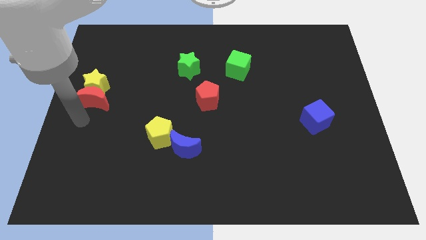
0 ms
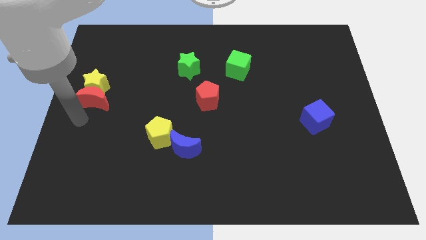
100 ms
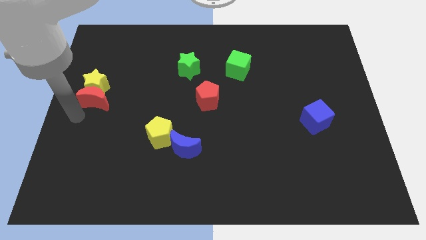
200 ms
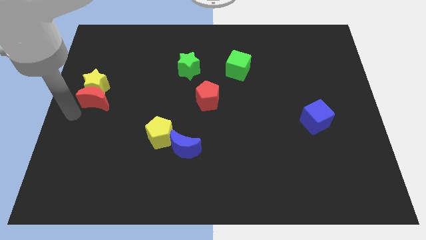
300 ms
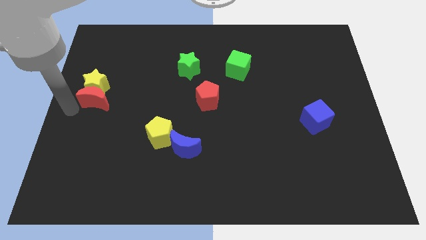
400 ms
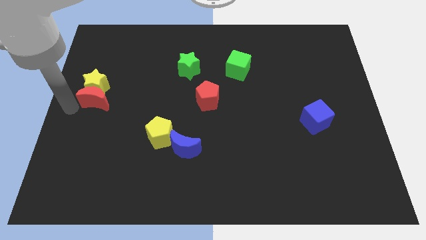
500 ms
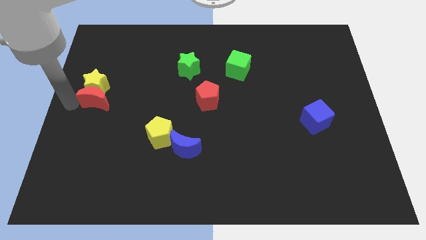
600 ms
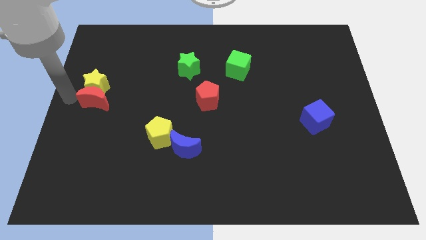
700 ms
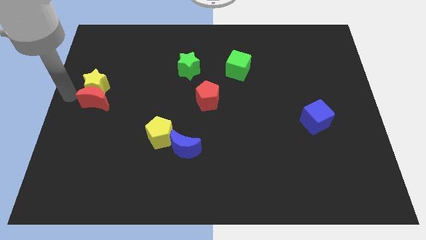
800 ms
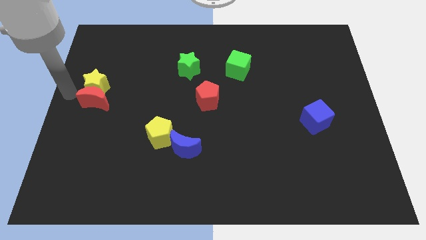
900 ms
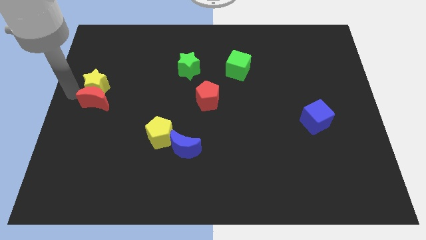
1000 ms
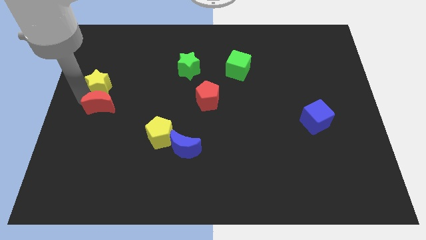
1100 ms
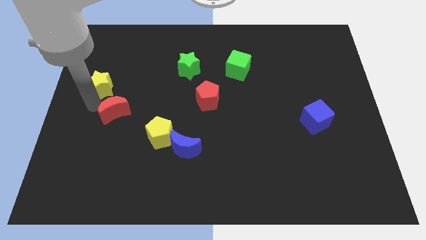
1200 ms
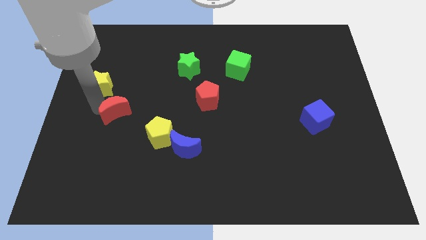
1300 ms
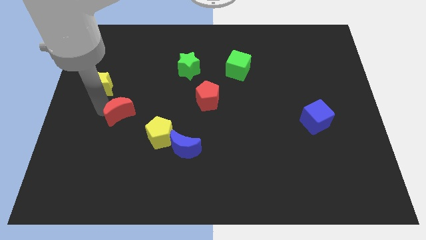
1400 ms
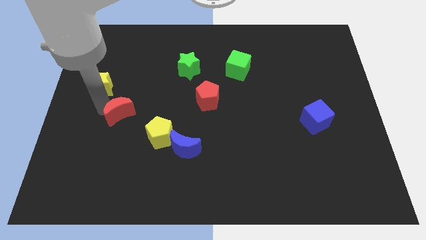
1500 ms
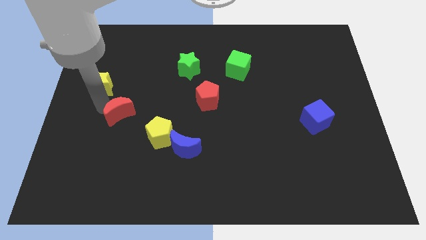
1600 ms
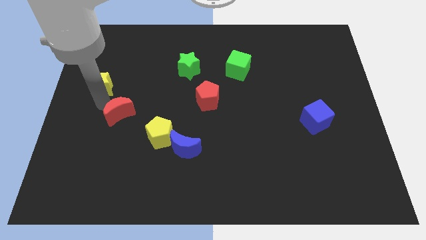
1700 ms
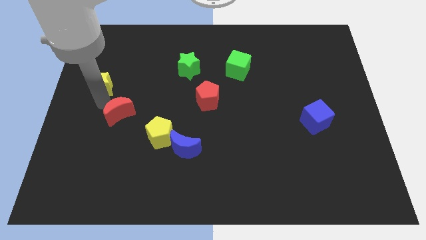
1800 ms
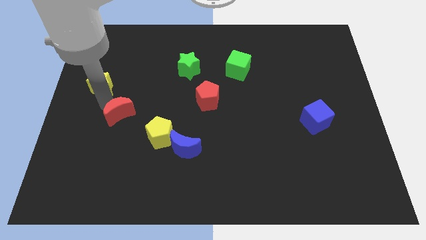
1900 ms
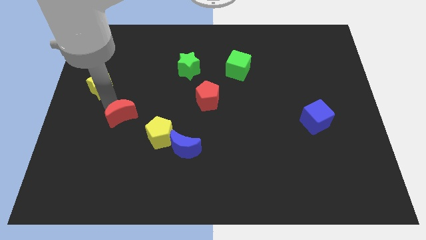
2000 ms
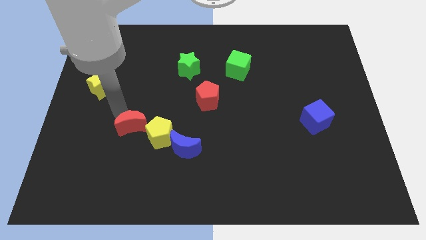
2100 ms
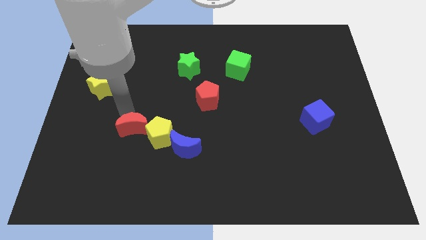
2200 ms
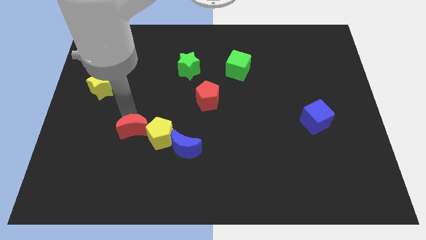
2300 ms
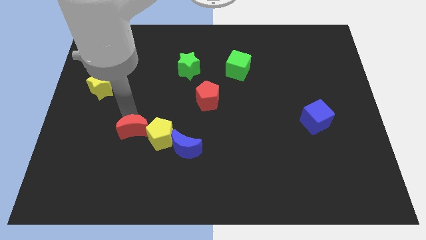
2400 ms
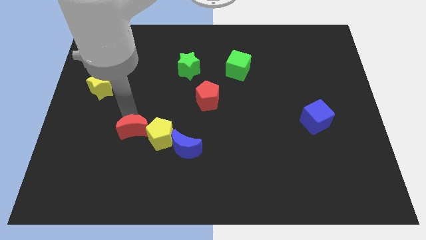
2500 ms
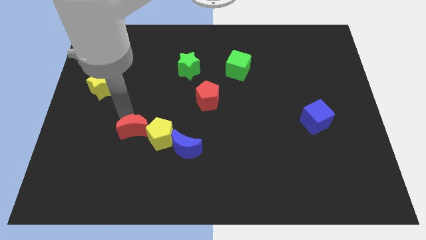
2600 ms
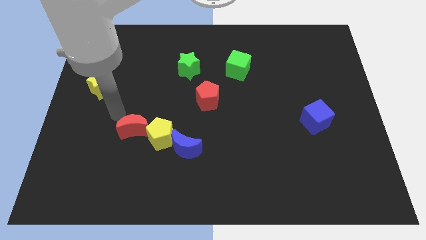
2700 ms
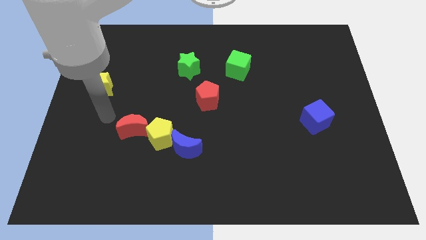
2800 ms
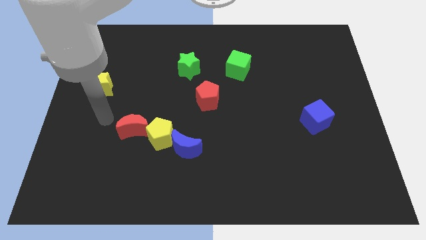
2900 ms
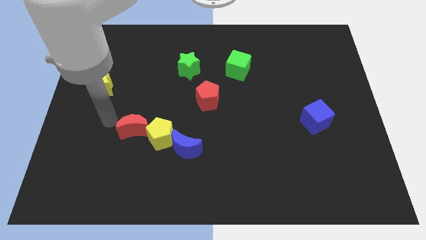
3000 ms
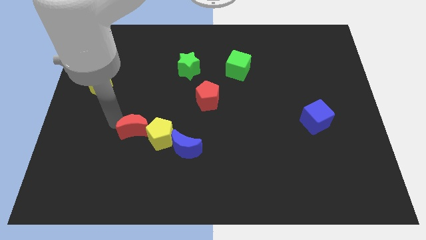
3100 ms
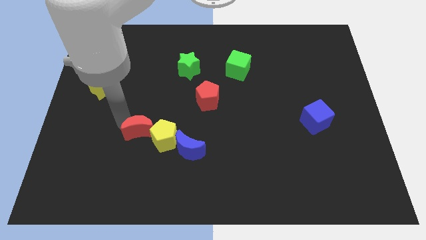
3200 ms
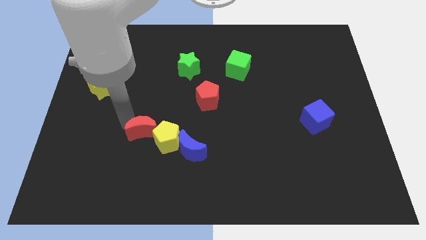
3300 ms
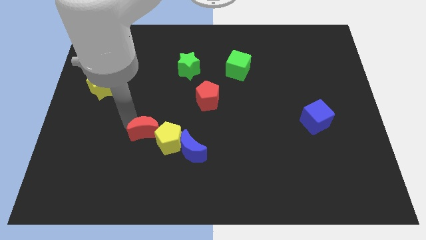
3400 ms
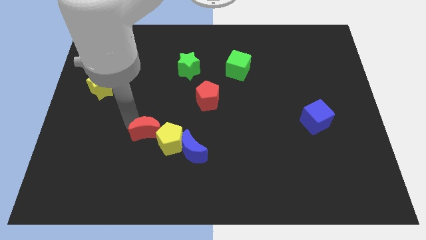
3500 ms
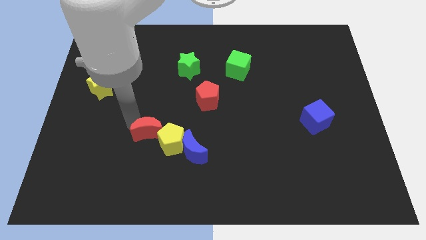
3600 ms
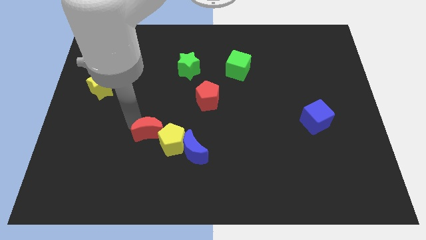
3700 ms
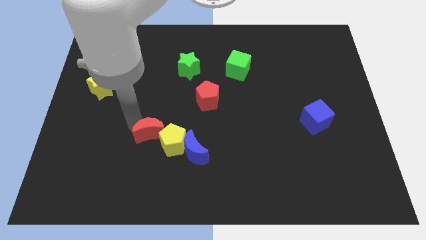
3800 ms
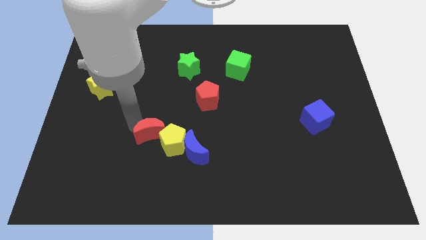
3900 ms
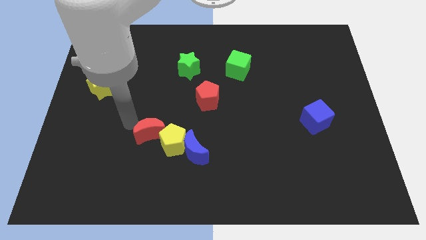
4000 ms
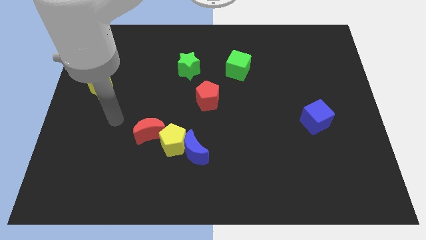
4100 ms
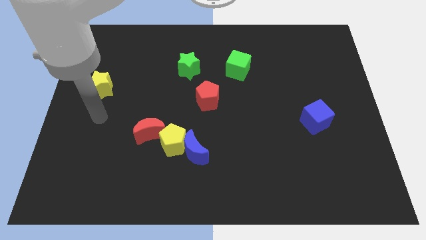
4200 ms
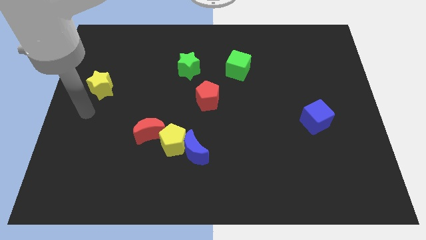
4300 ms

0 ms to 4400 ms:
push the red crescent into the top left of the yellow pentagon

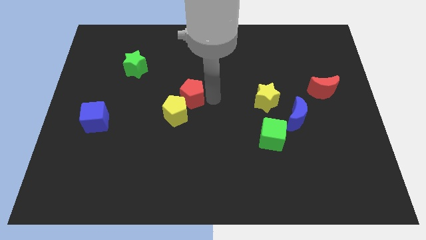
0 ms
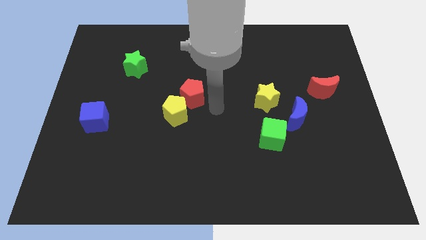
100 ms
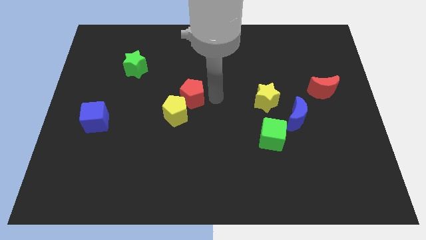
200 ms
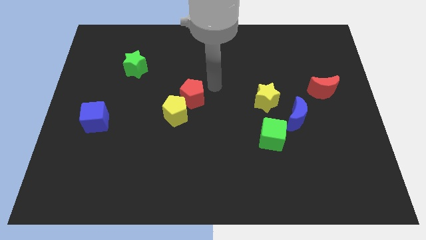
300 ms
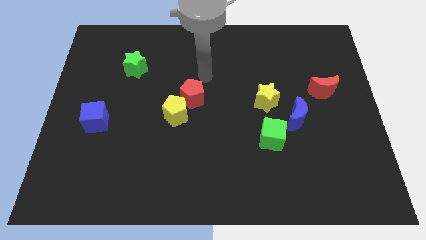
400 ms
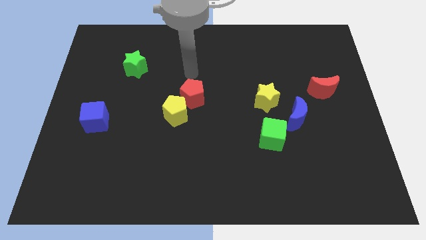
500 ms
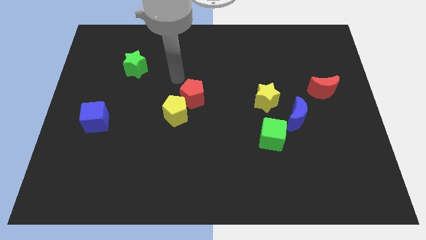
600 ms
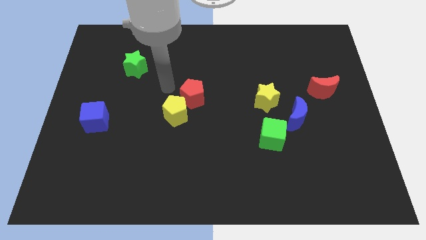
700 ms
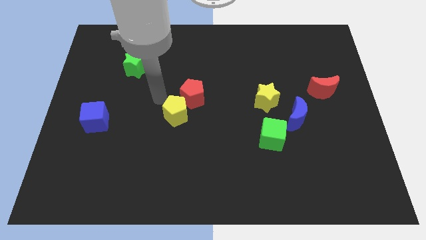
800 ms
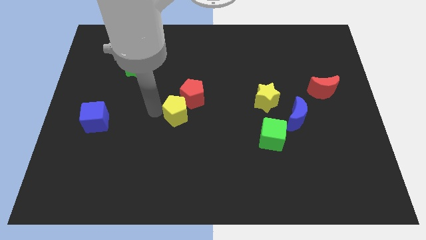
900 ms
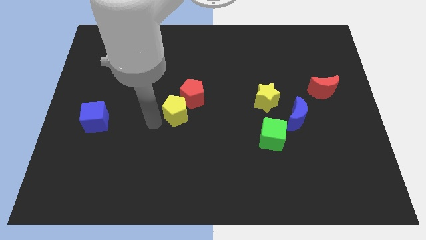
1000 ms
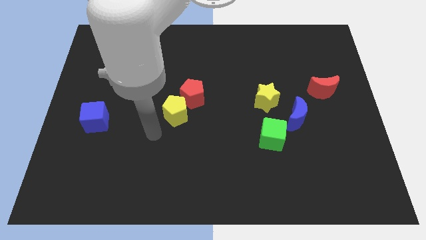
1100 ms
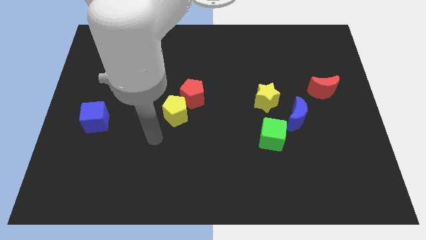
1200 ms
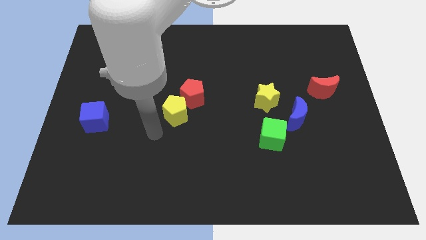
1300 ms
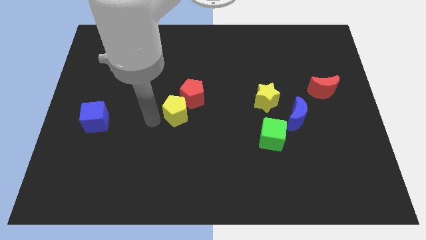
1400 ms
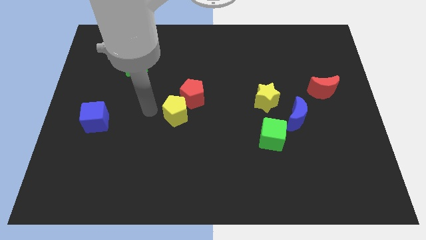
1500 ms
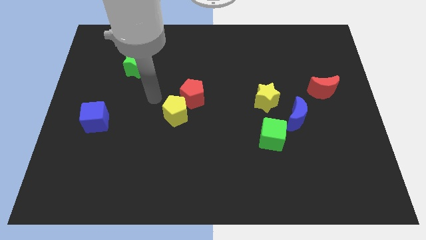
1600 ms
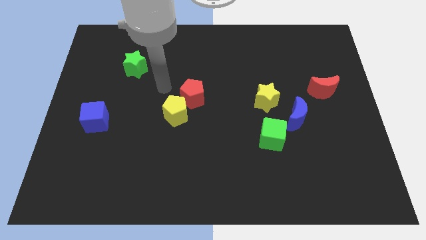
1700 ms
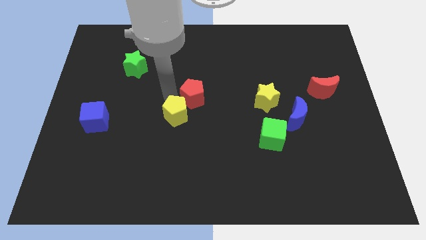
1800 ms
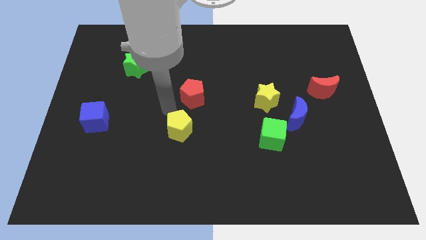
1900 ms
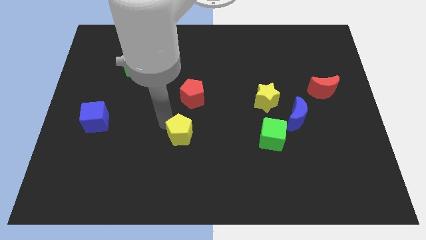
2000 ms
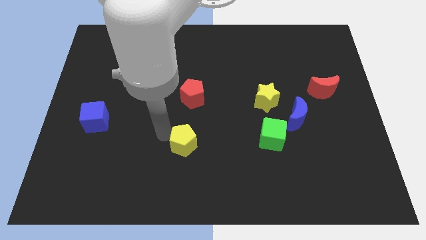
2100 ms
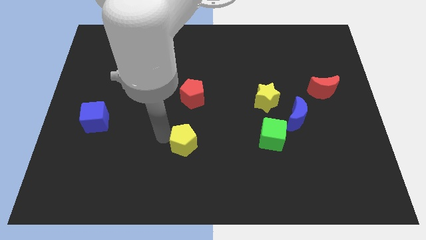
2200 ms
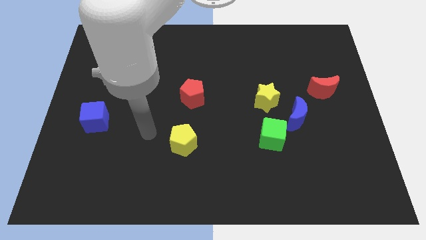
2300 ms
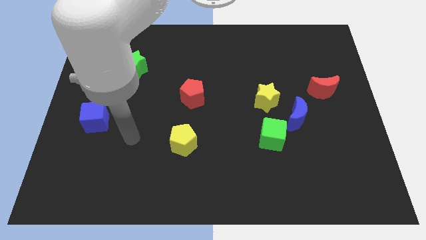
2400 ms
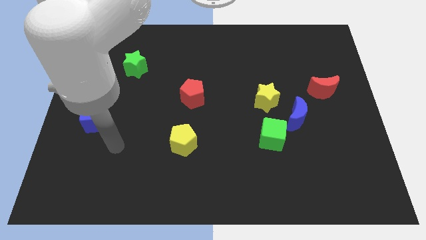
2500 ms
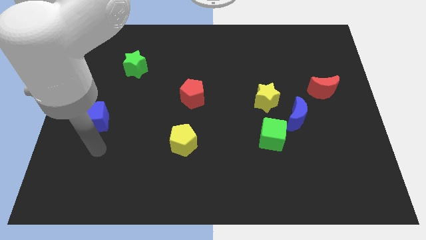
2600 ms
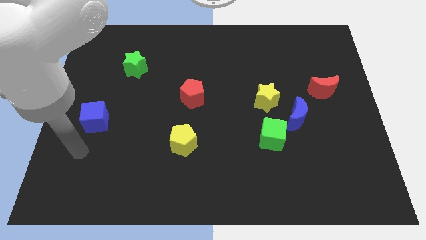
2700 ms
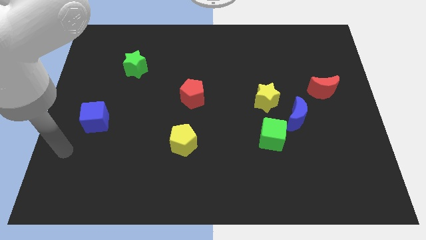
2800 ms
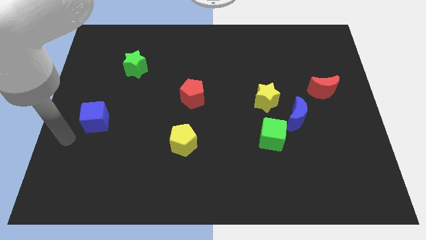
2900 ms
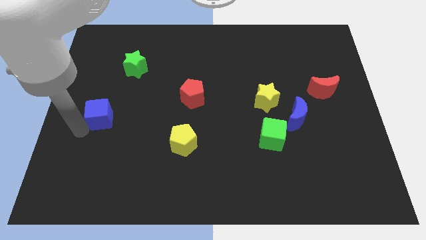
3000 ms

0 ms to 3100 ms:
separate the yellow pentagon from red pentagon and move away

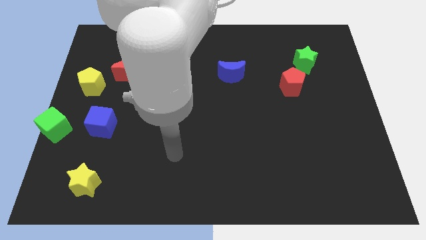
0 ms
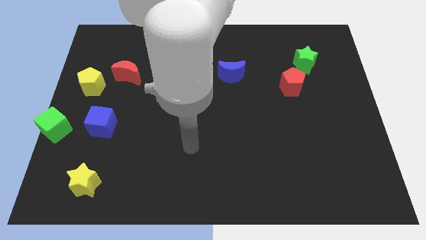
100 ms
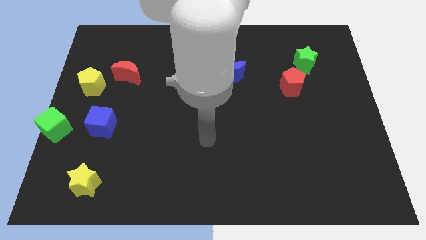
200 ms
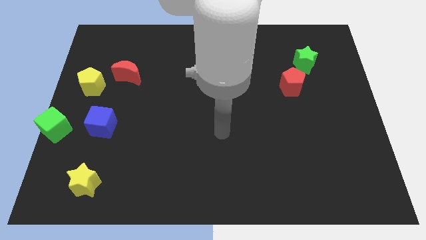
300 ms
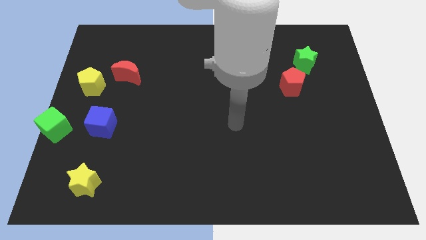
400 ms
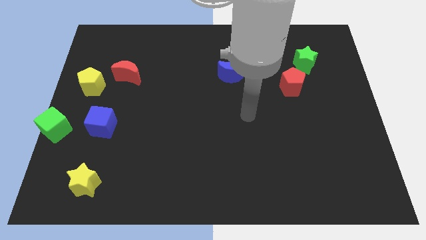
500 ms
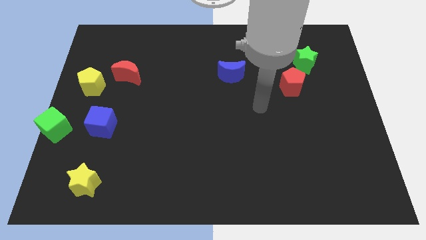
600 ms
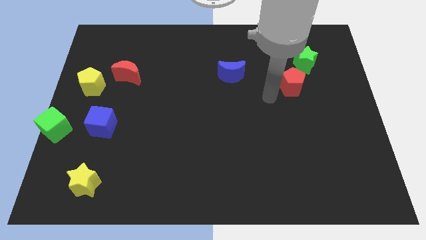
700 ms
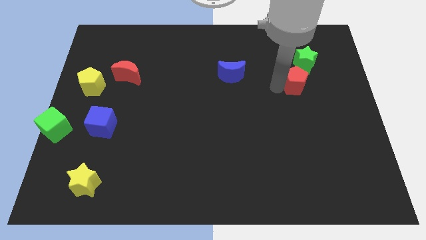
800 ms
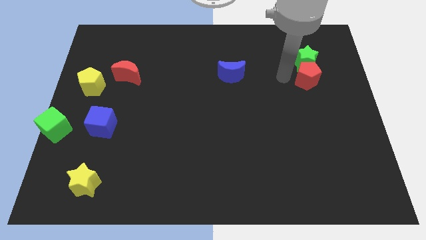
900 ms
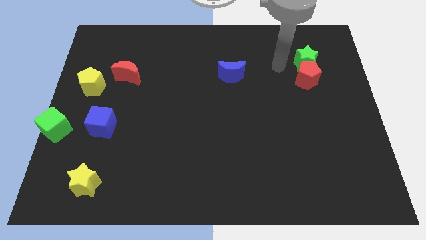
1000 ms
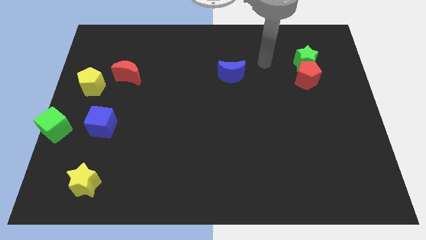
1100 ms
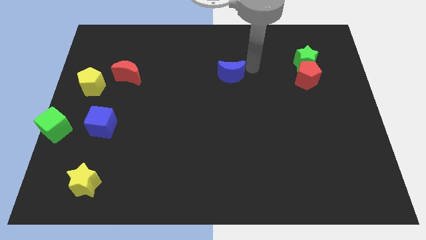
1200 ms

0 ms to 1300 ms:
slightly push the red pentagon to the bottom side of the green star

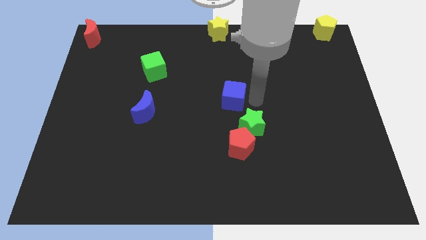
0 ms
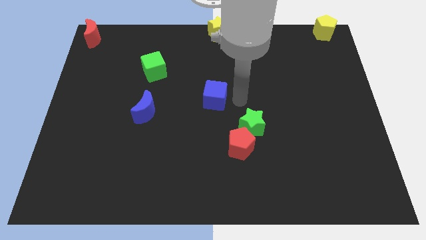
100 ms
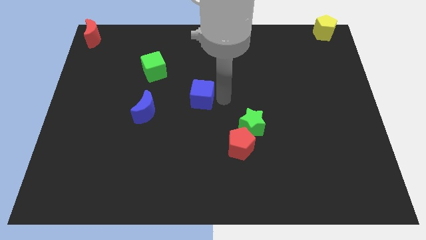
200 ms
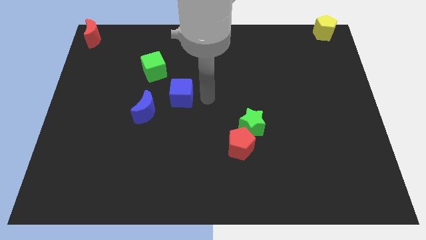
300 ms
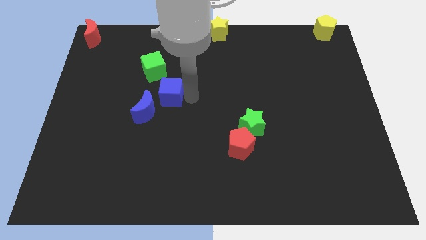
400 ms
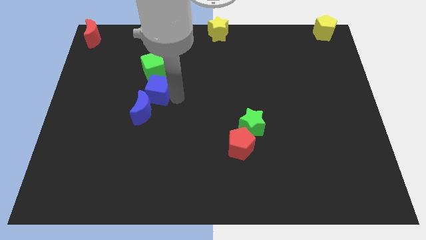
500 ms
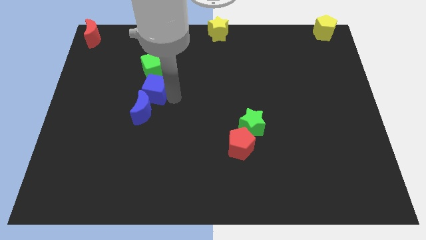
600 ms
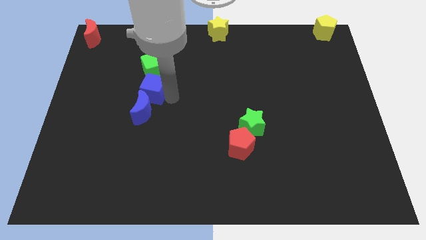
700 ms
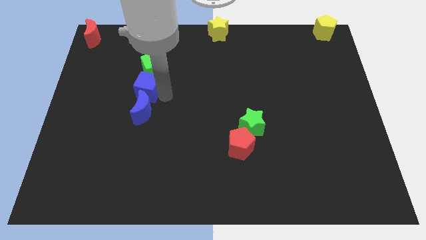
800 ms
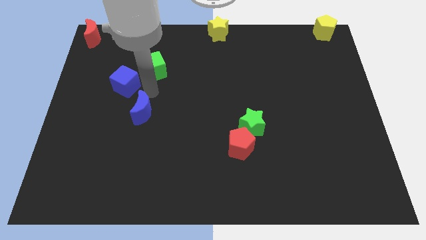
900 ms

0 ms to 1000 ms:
place blue cube between green cube and blue moon
